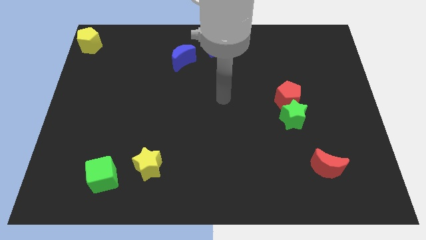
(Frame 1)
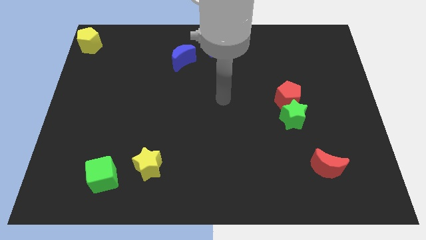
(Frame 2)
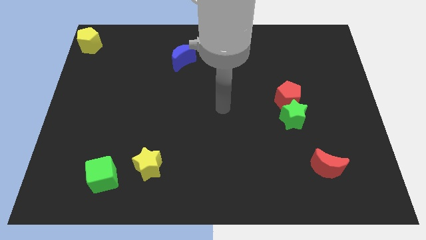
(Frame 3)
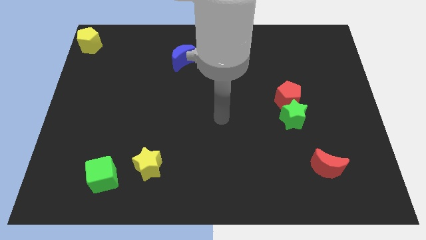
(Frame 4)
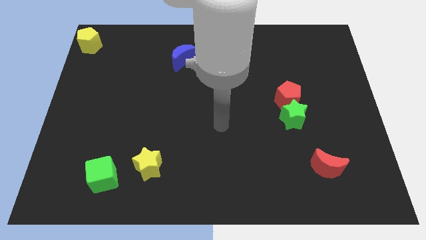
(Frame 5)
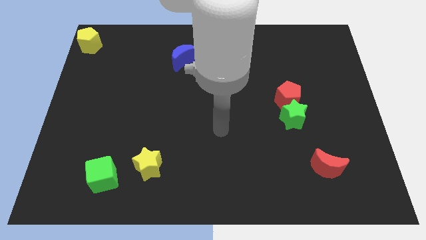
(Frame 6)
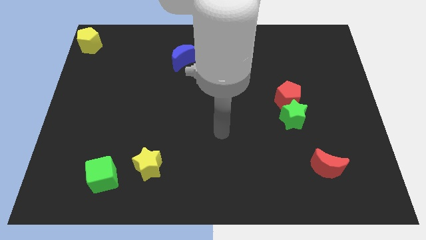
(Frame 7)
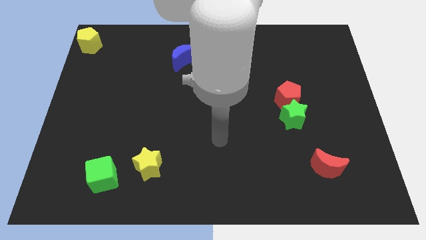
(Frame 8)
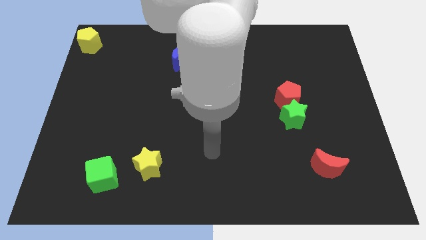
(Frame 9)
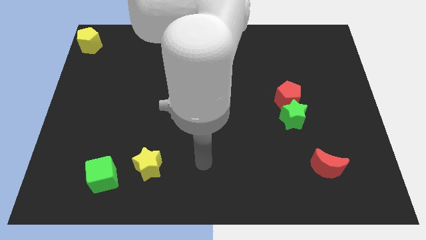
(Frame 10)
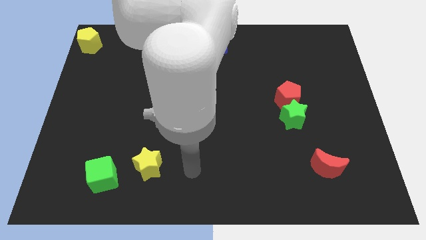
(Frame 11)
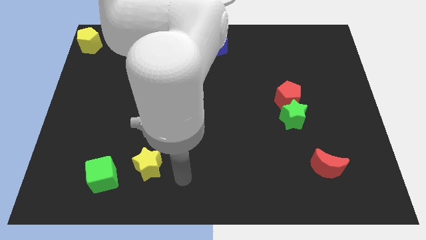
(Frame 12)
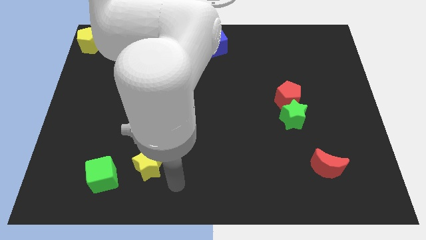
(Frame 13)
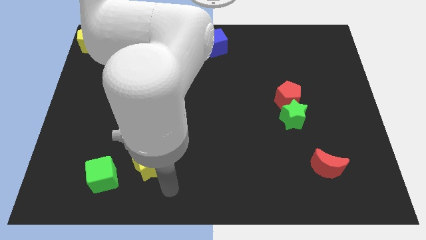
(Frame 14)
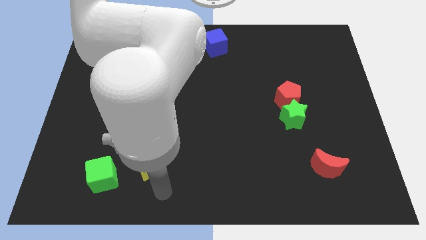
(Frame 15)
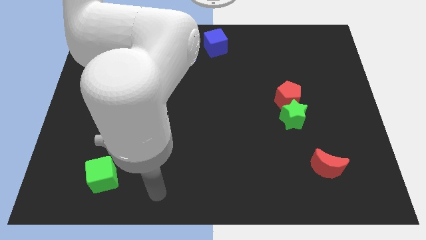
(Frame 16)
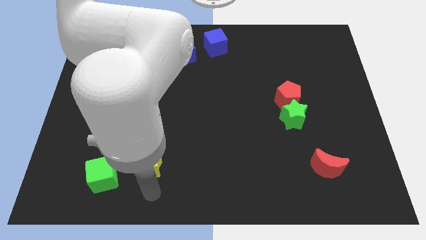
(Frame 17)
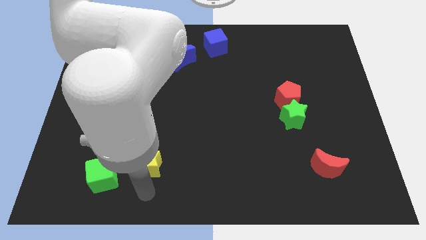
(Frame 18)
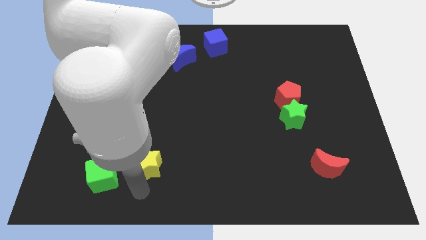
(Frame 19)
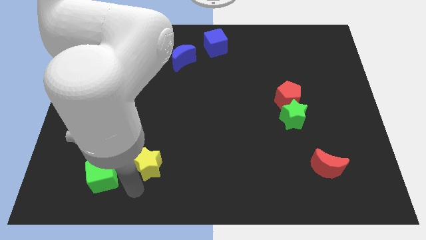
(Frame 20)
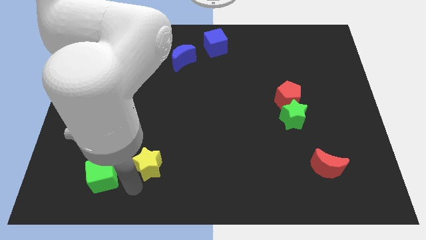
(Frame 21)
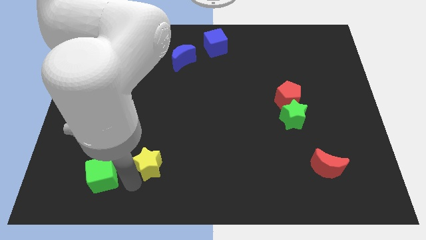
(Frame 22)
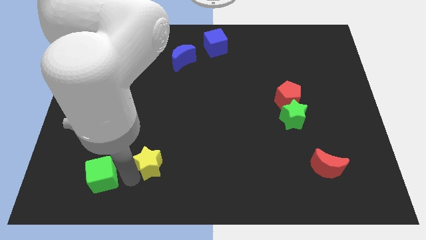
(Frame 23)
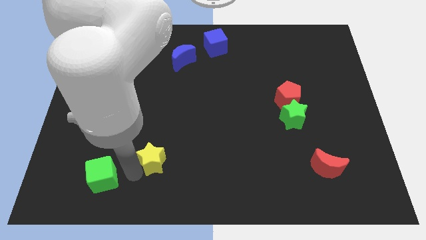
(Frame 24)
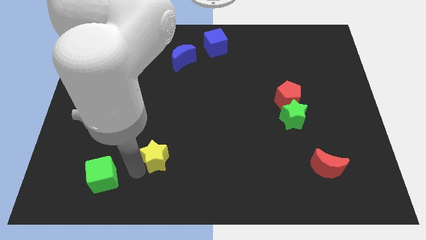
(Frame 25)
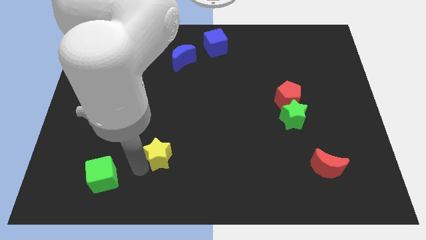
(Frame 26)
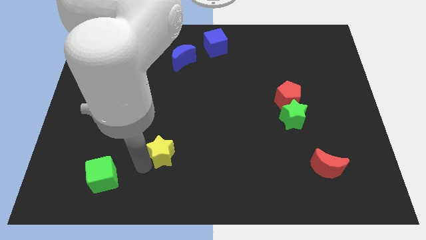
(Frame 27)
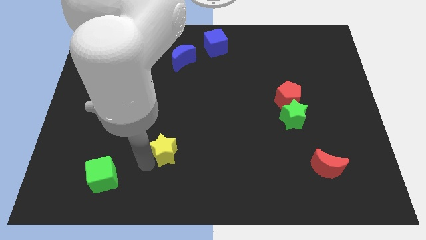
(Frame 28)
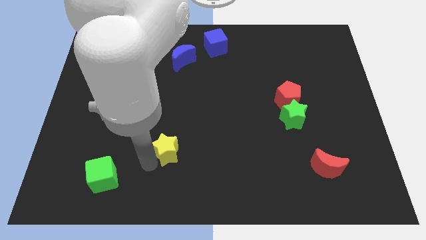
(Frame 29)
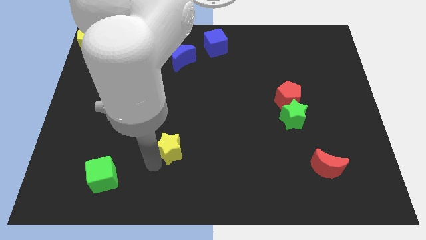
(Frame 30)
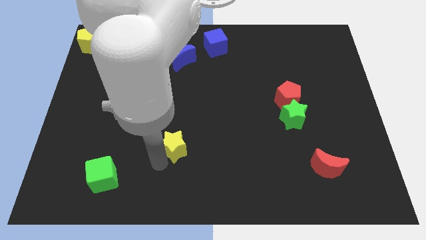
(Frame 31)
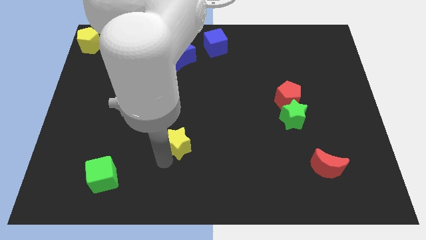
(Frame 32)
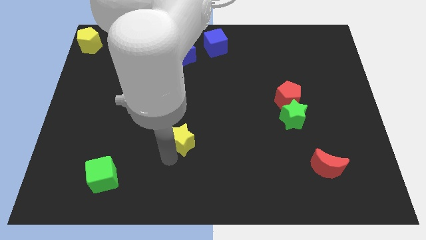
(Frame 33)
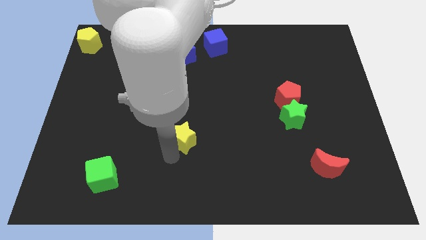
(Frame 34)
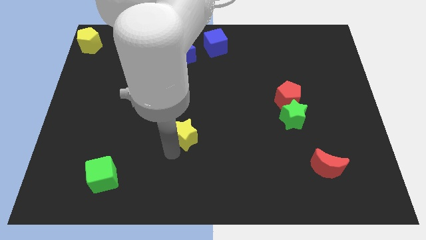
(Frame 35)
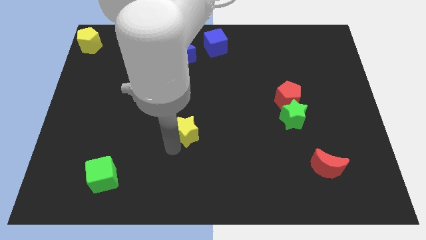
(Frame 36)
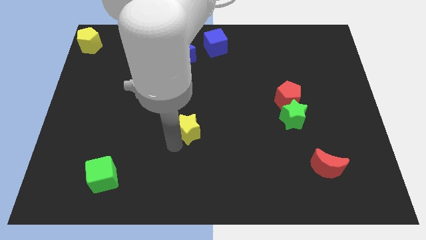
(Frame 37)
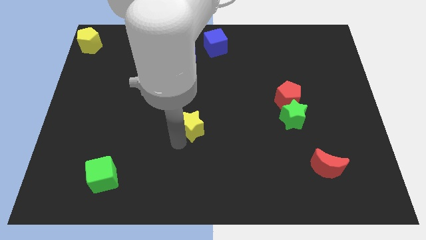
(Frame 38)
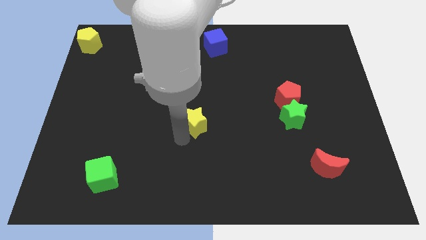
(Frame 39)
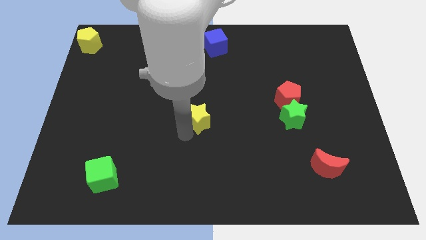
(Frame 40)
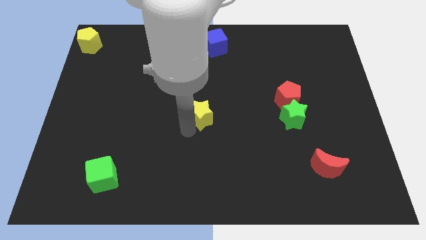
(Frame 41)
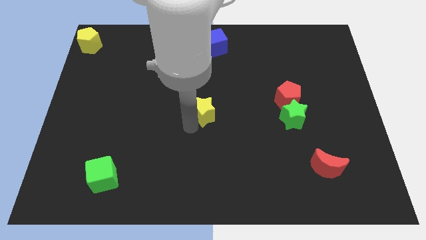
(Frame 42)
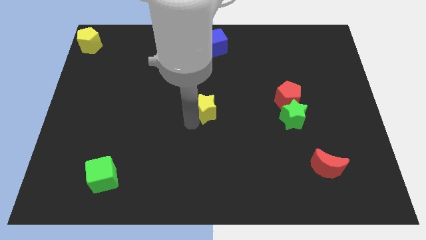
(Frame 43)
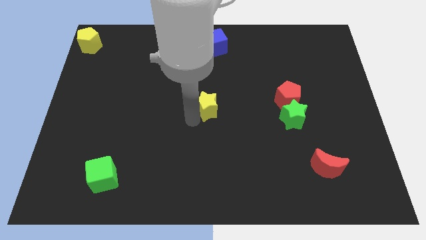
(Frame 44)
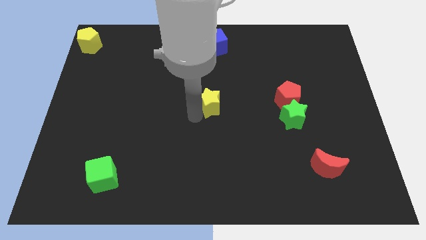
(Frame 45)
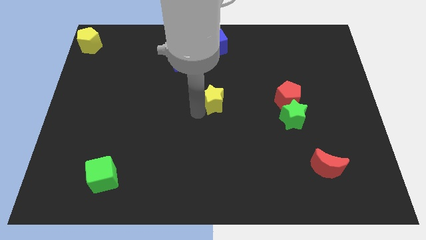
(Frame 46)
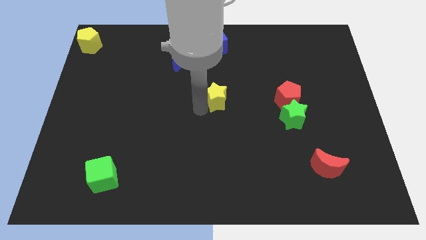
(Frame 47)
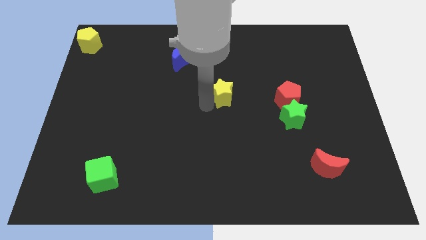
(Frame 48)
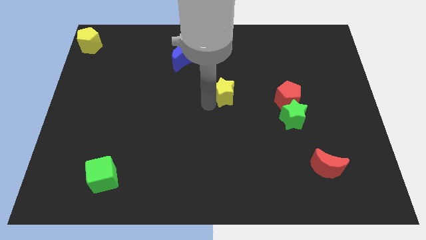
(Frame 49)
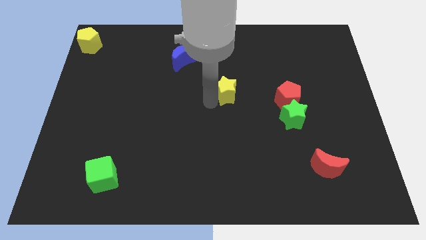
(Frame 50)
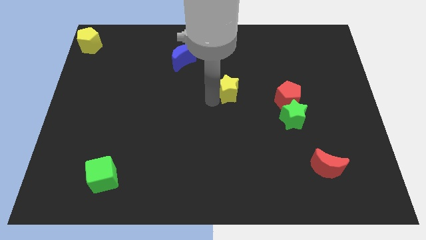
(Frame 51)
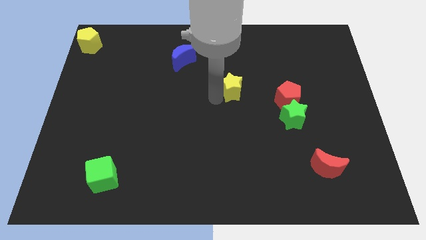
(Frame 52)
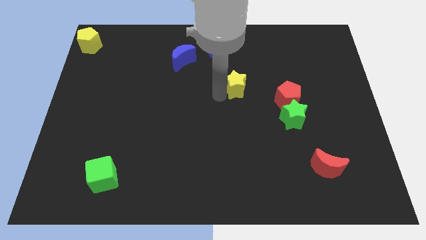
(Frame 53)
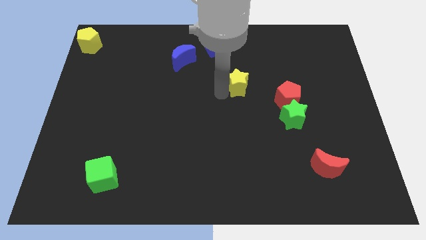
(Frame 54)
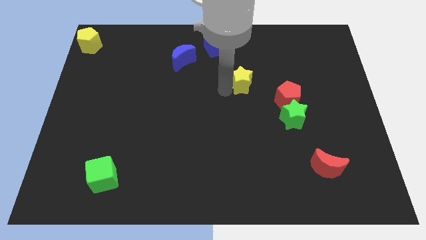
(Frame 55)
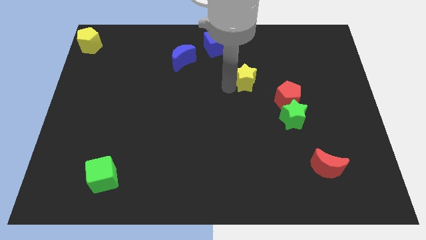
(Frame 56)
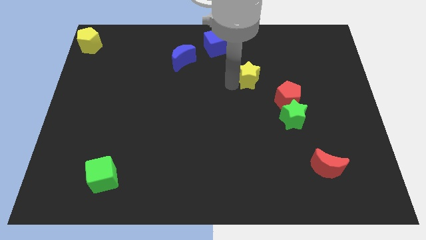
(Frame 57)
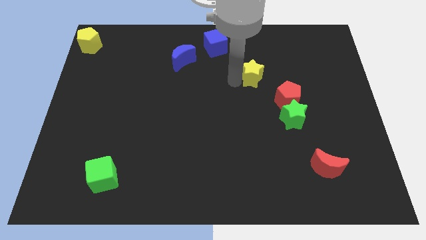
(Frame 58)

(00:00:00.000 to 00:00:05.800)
place the yellow star diagonally in between red pentagon and blue cube

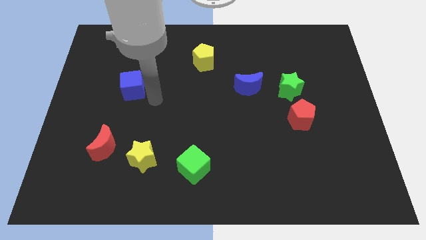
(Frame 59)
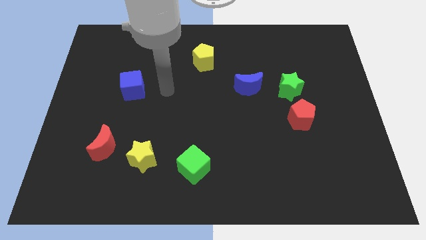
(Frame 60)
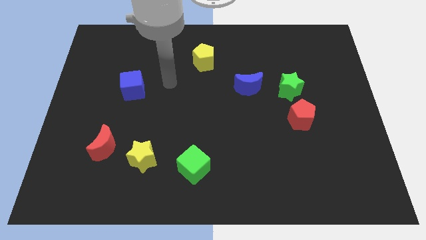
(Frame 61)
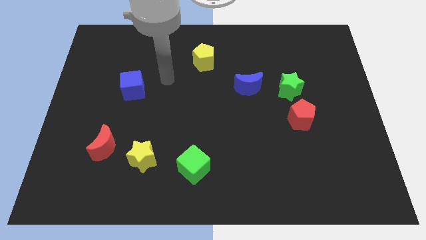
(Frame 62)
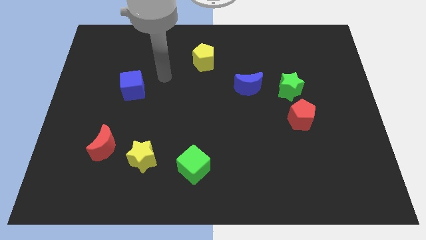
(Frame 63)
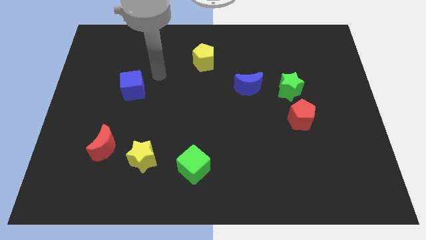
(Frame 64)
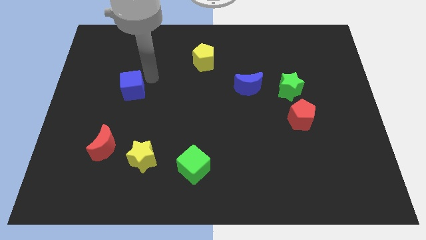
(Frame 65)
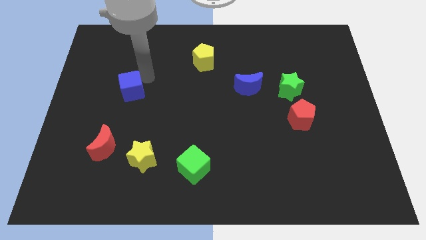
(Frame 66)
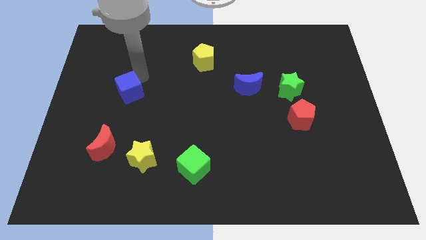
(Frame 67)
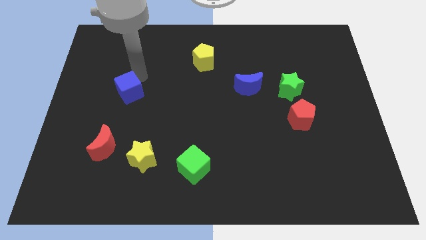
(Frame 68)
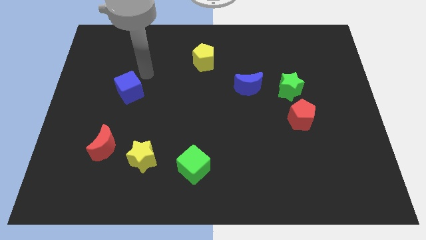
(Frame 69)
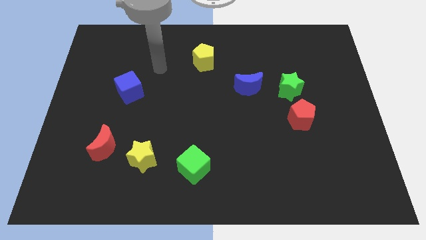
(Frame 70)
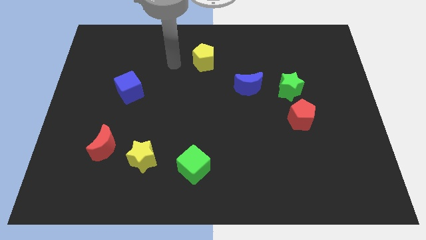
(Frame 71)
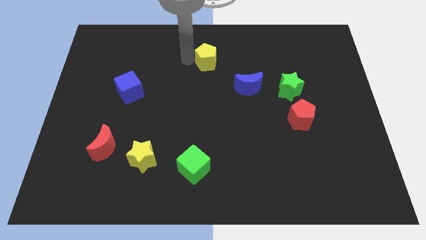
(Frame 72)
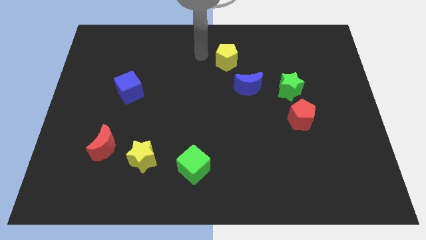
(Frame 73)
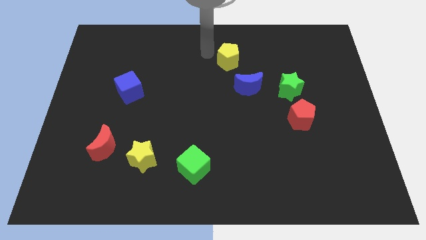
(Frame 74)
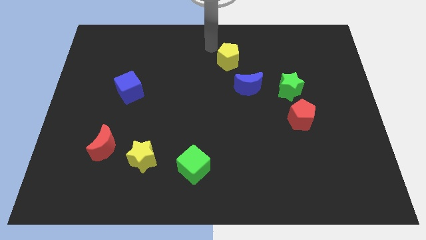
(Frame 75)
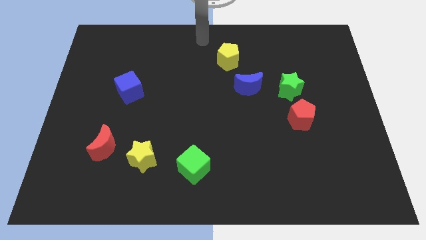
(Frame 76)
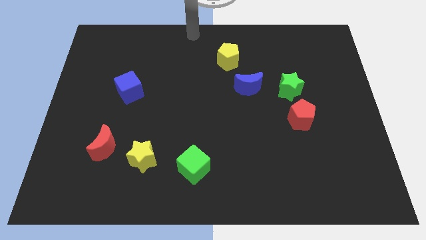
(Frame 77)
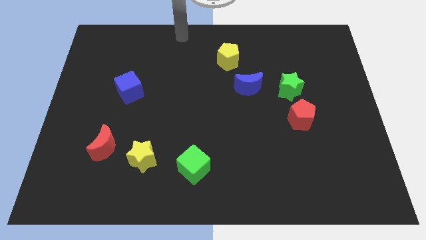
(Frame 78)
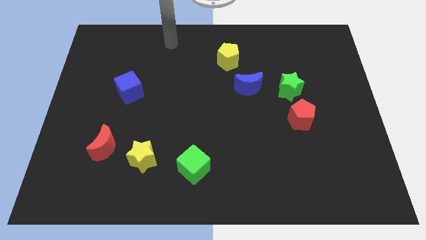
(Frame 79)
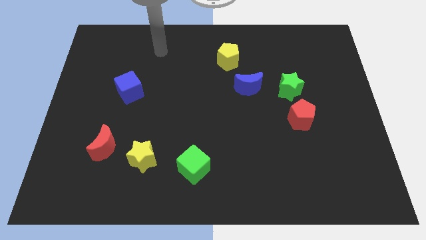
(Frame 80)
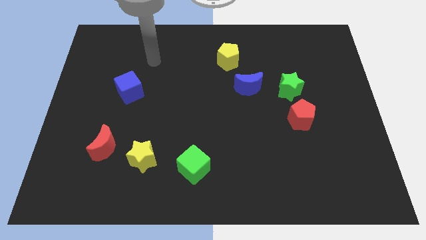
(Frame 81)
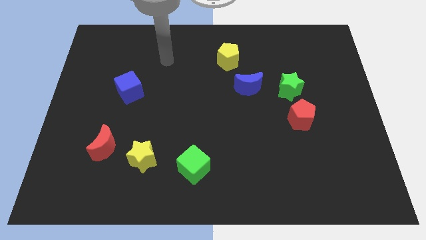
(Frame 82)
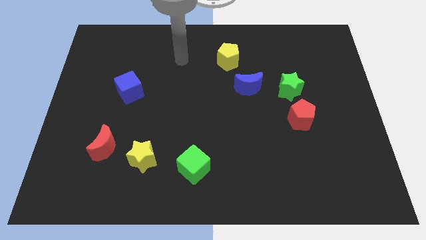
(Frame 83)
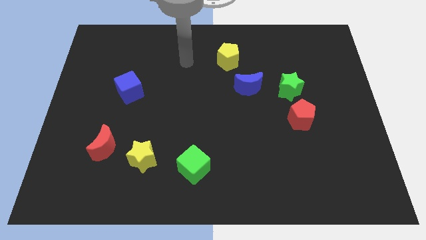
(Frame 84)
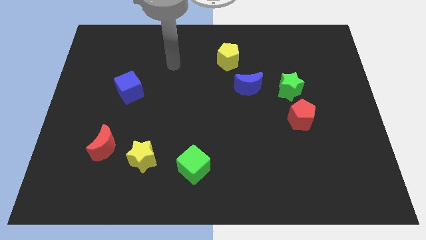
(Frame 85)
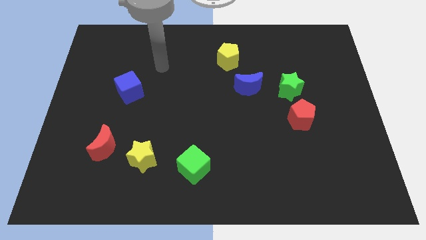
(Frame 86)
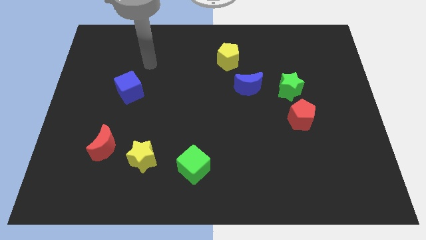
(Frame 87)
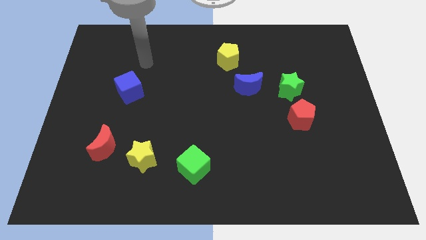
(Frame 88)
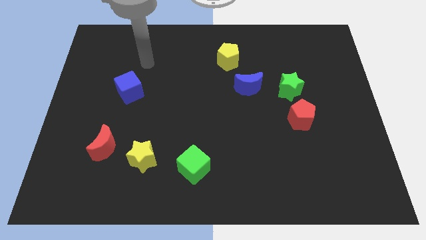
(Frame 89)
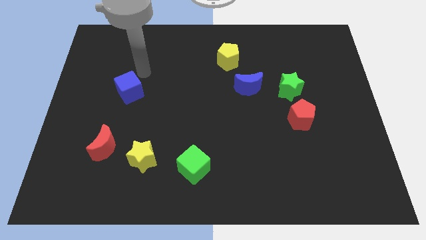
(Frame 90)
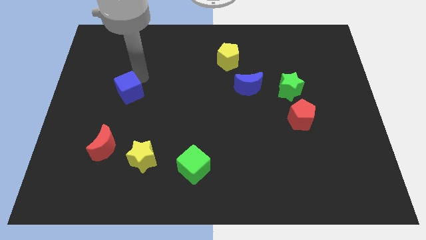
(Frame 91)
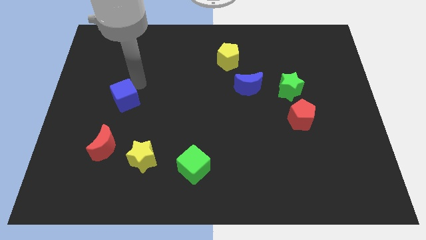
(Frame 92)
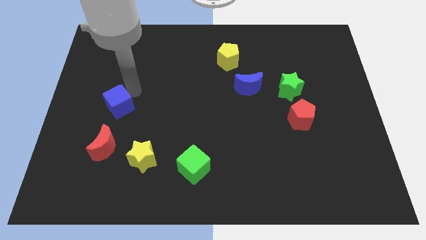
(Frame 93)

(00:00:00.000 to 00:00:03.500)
push the blue cube and yellow pentagon in opposite directions
